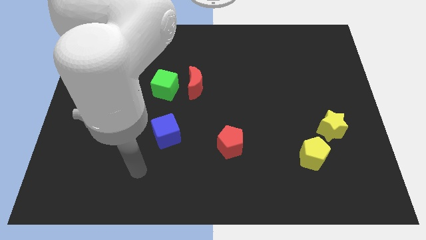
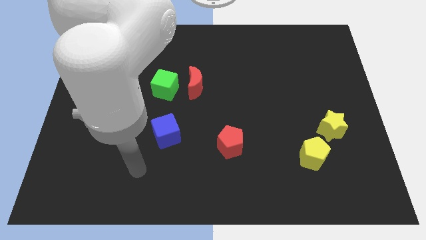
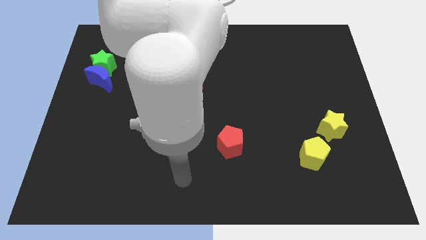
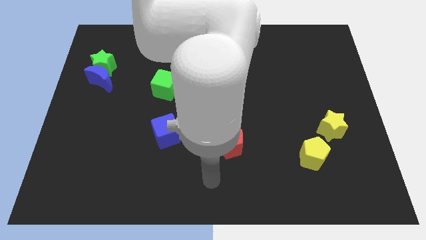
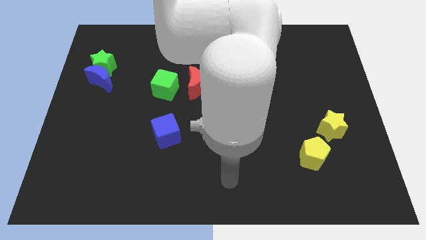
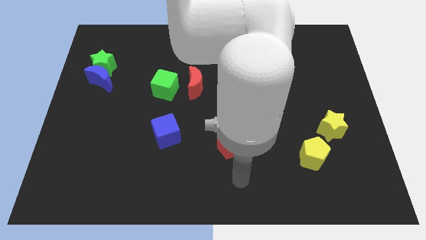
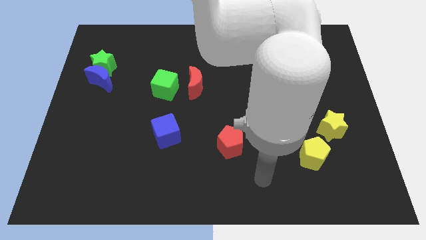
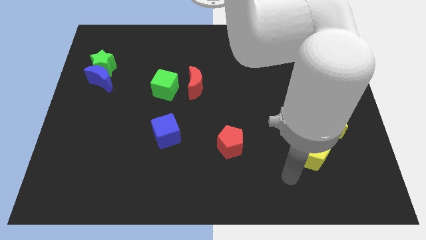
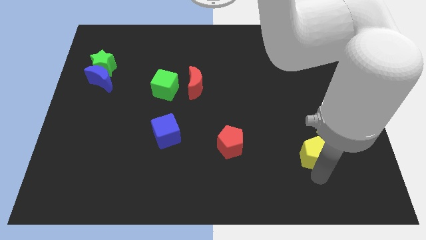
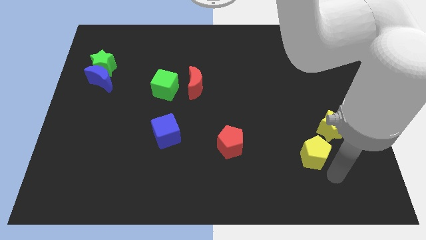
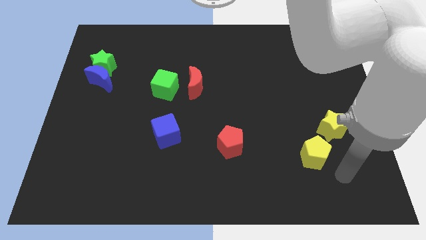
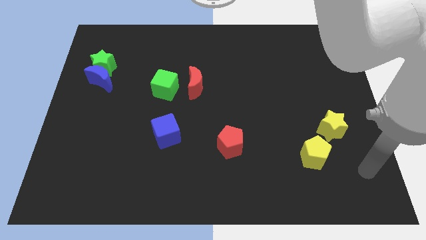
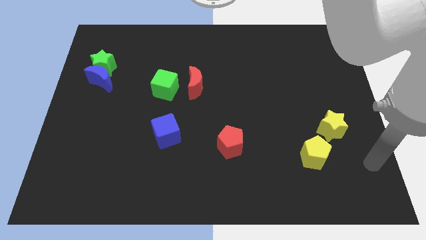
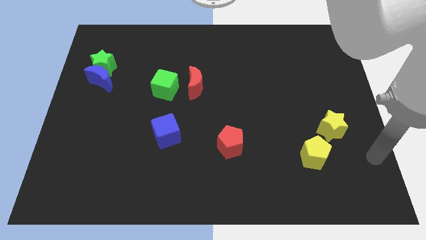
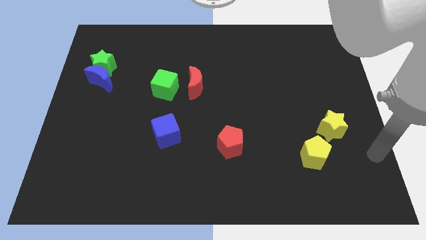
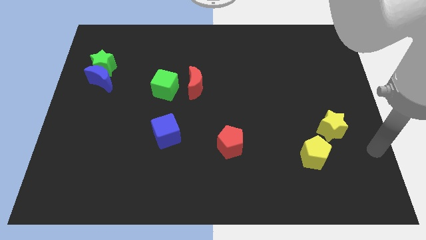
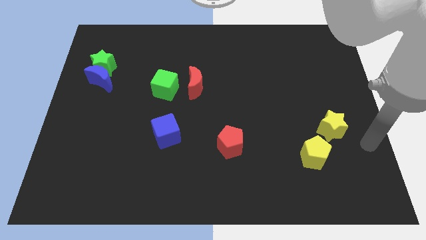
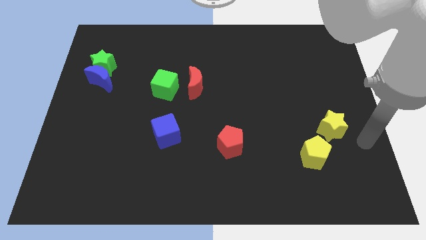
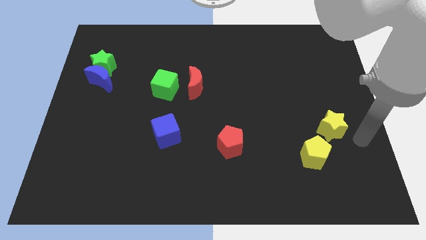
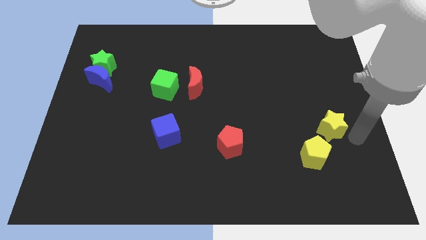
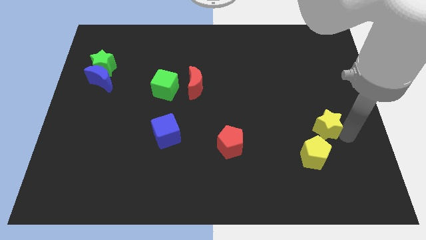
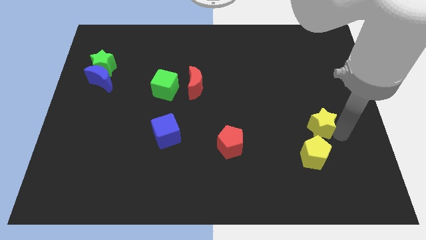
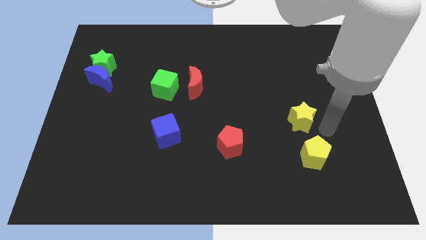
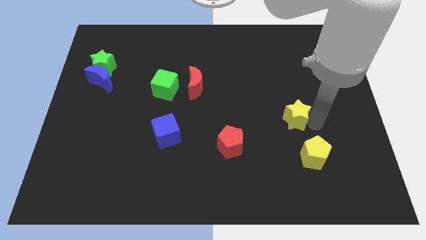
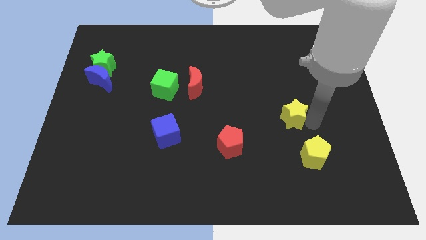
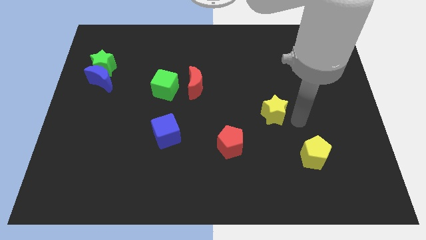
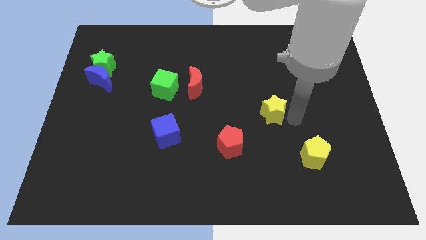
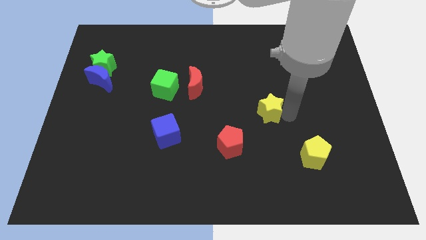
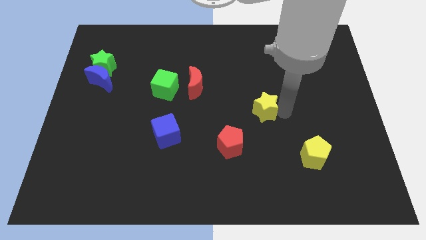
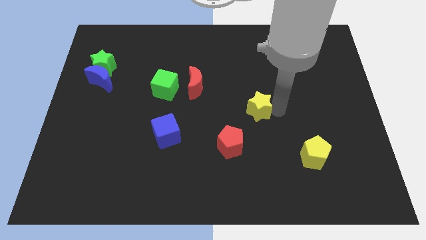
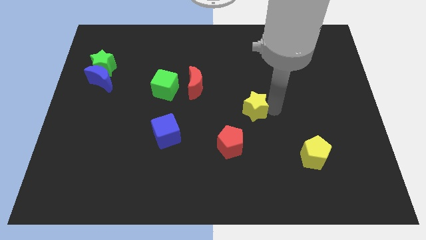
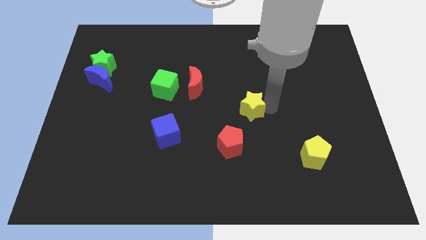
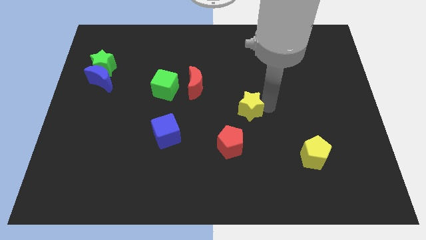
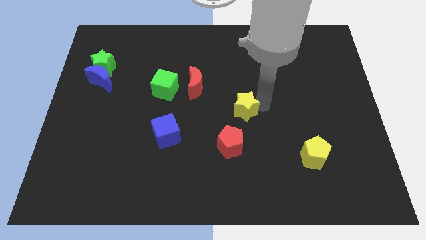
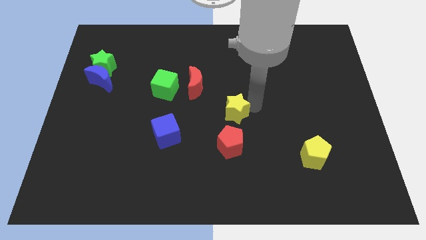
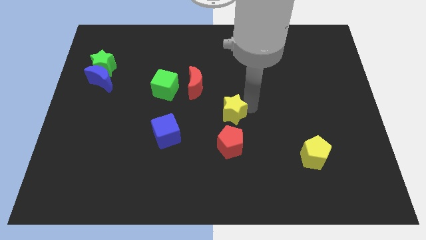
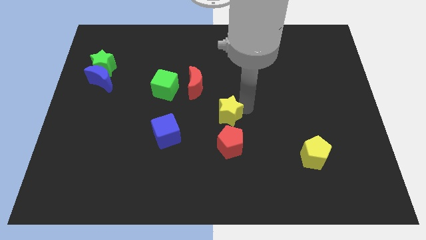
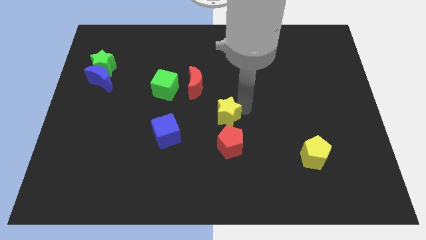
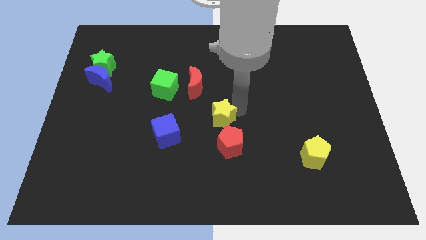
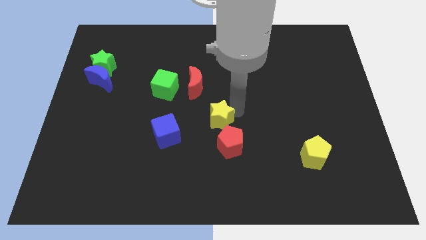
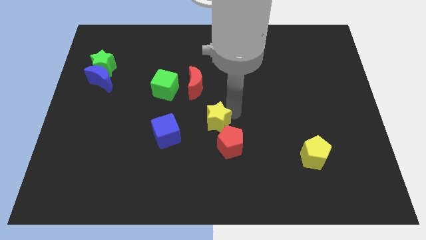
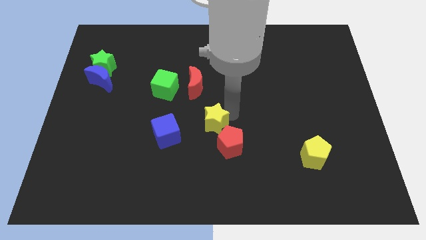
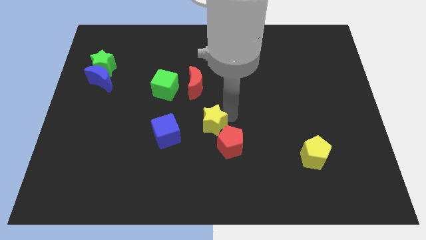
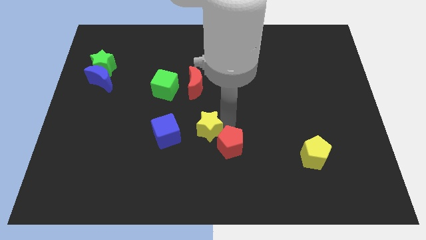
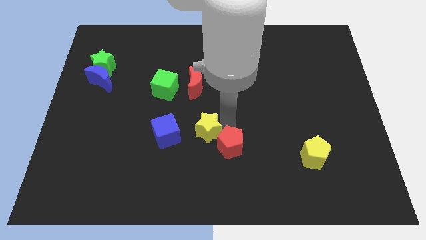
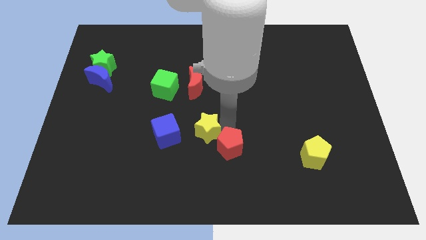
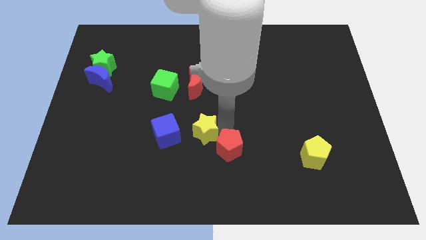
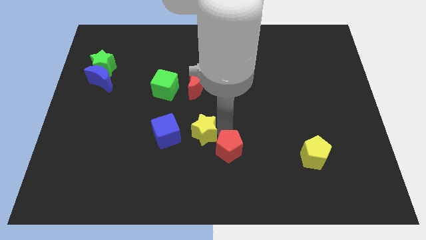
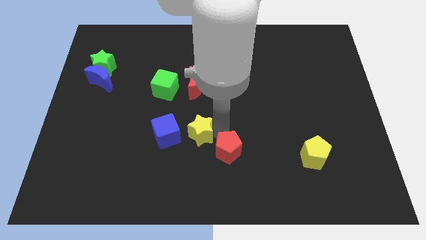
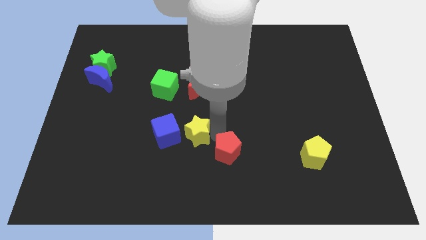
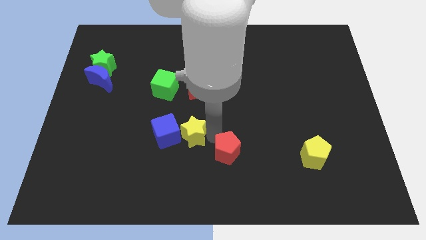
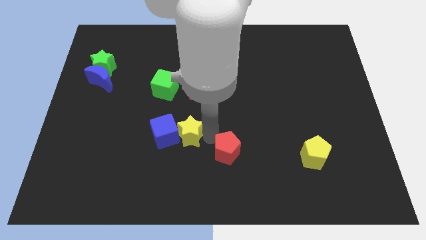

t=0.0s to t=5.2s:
push the yellow star to the blue cube

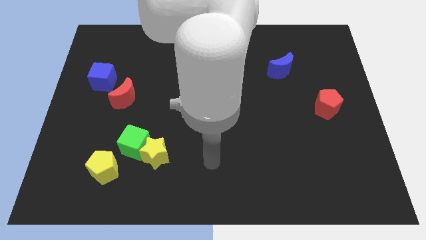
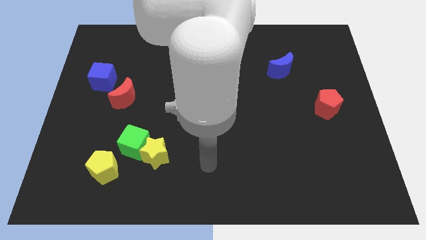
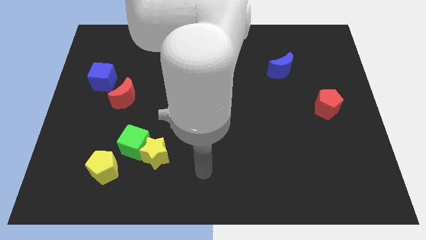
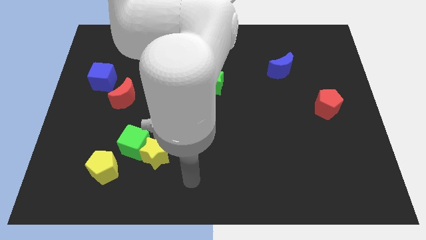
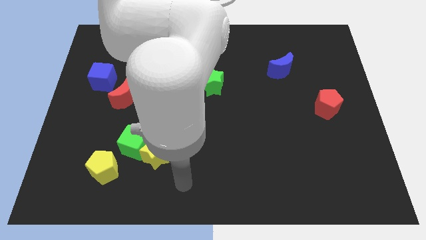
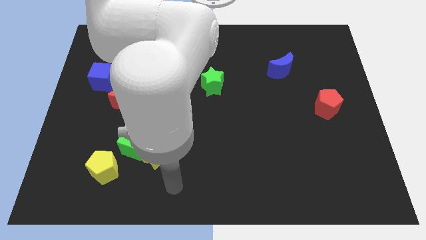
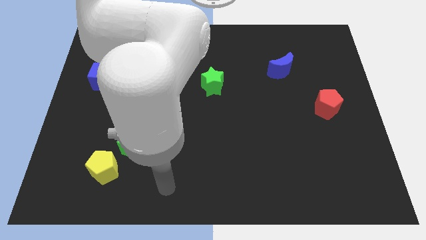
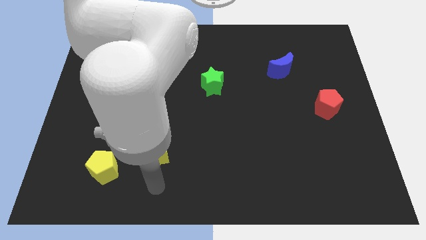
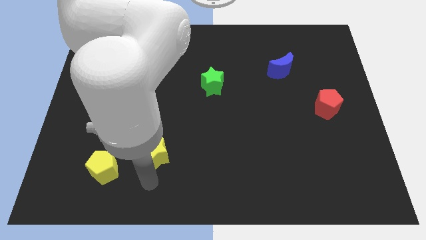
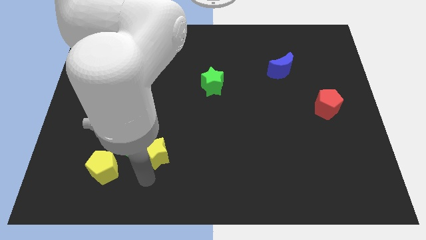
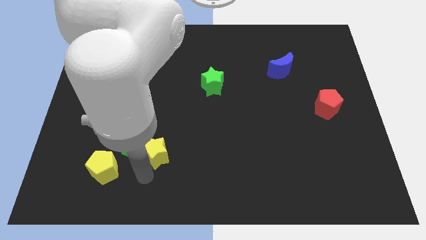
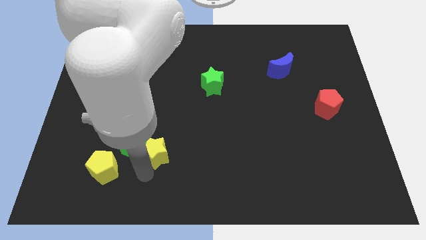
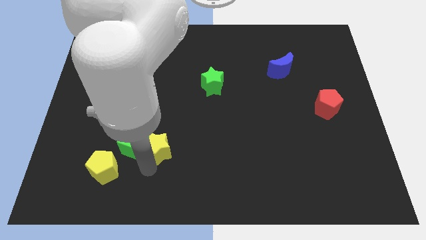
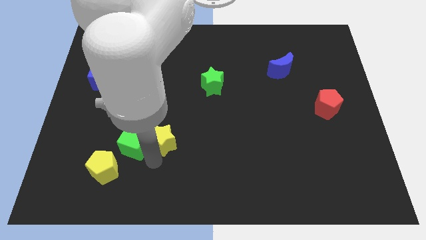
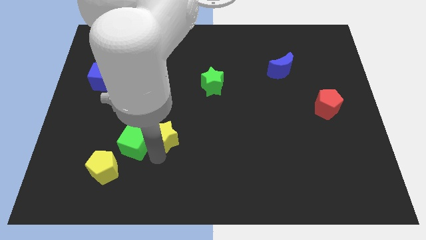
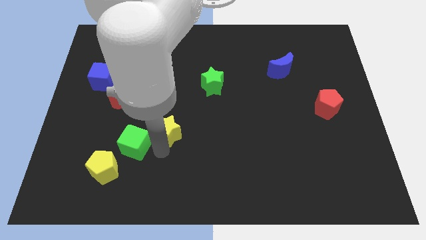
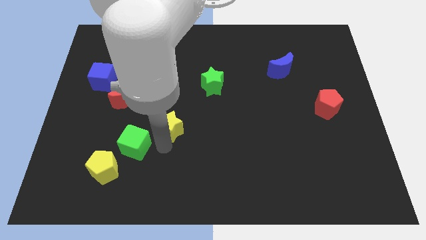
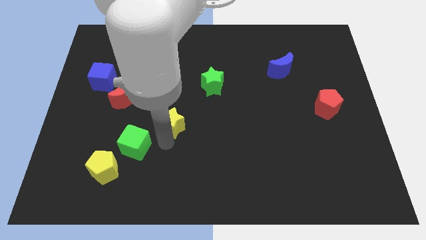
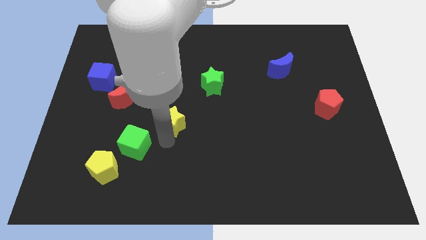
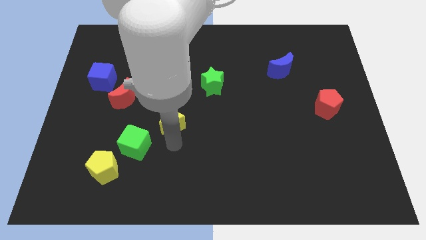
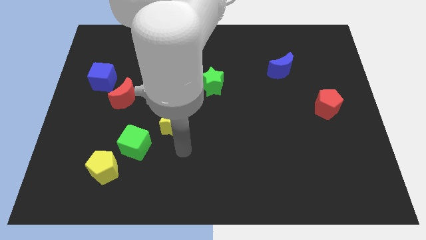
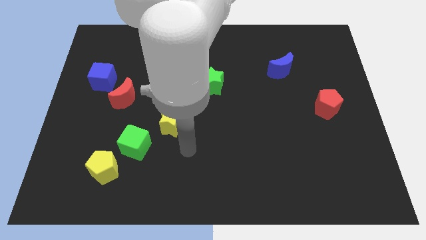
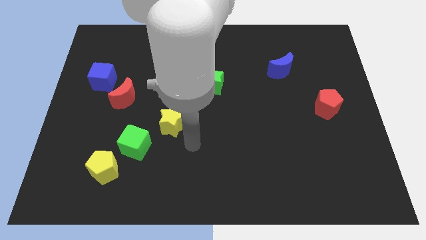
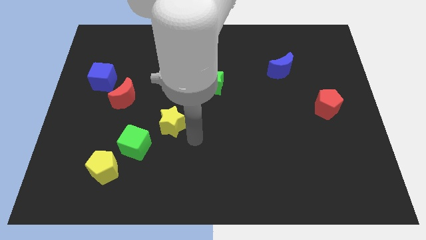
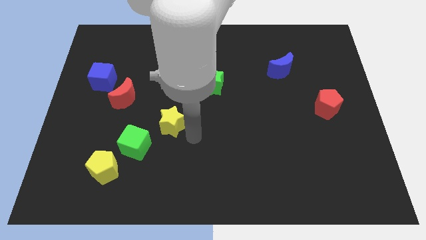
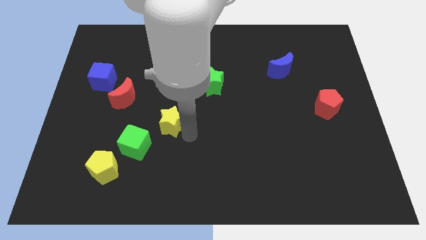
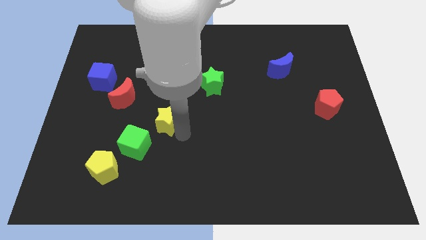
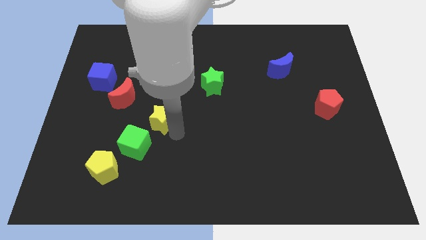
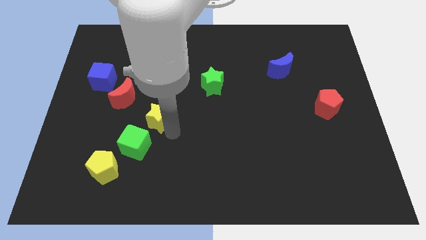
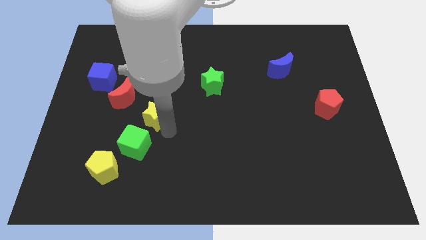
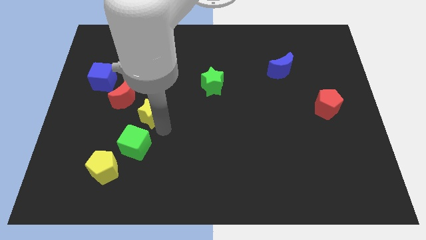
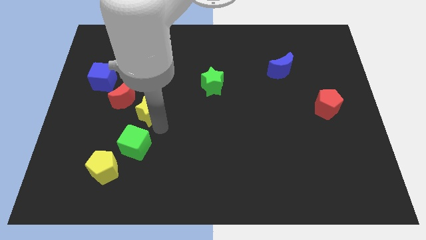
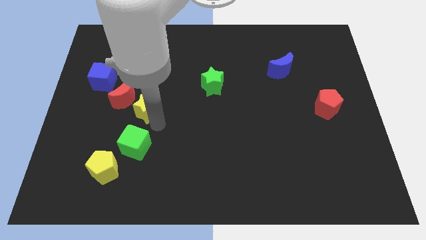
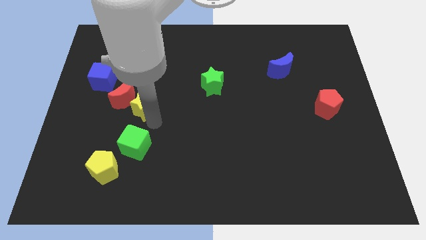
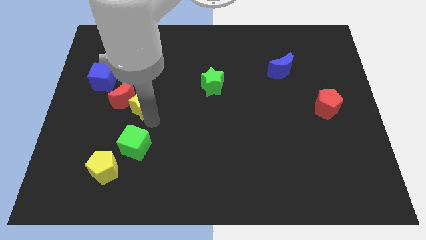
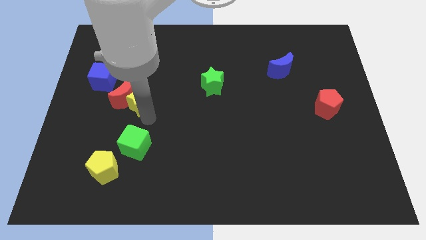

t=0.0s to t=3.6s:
push the yellow star close to the red moon
